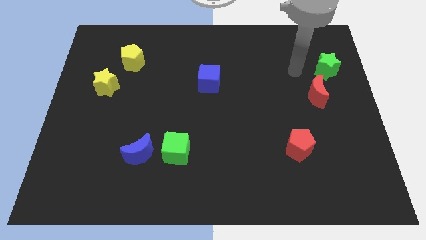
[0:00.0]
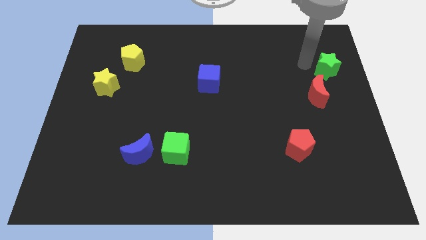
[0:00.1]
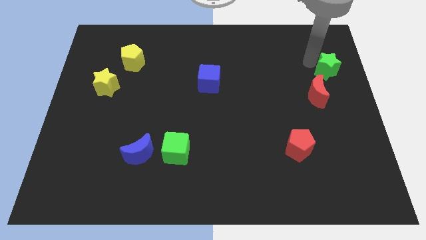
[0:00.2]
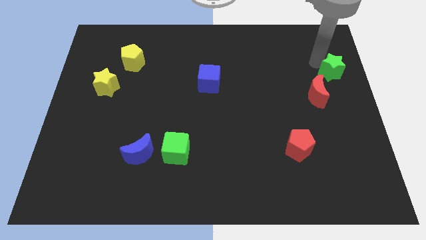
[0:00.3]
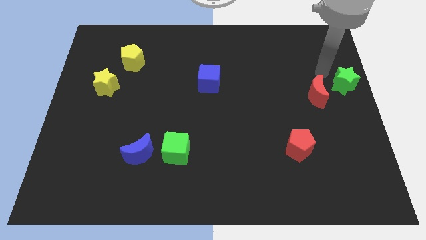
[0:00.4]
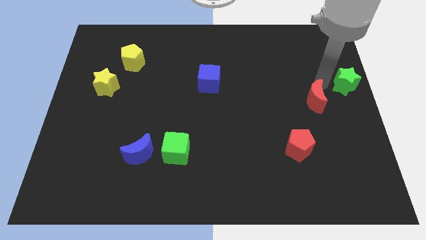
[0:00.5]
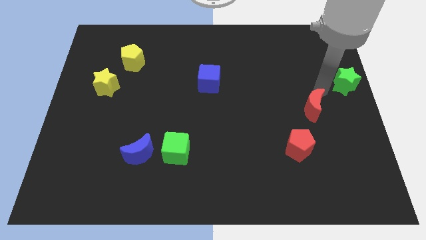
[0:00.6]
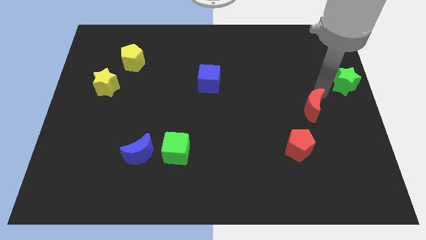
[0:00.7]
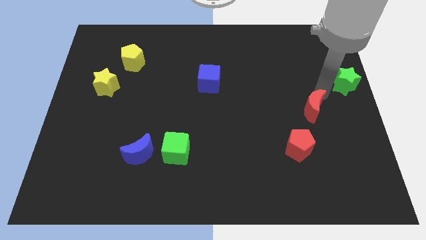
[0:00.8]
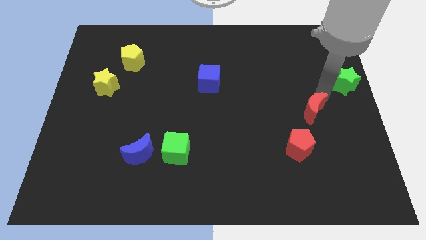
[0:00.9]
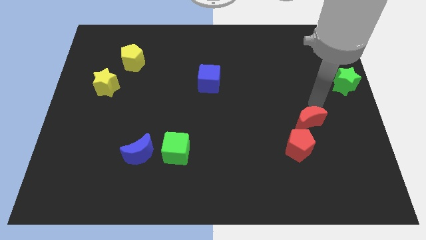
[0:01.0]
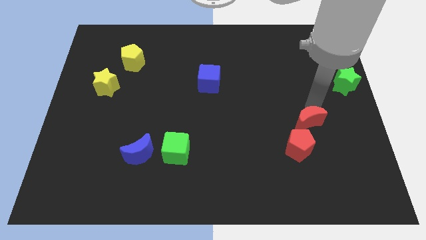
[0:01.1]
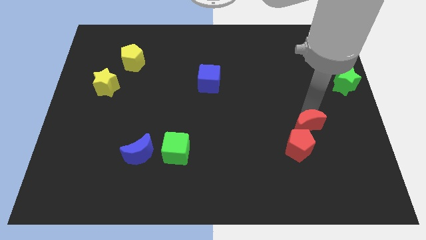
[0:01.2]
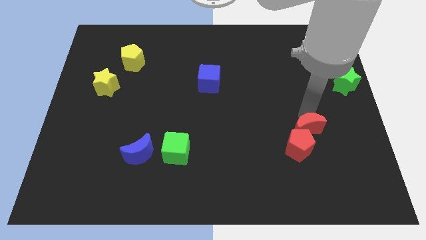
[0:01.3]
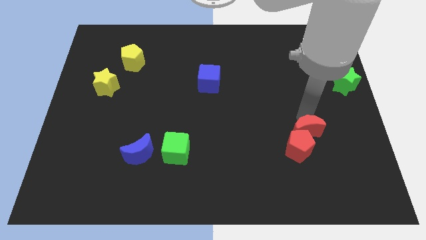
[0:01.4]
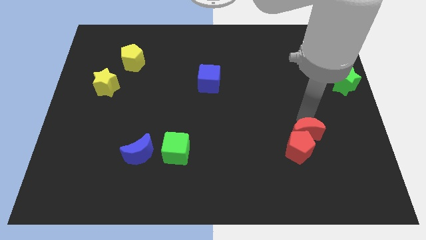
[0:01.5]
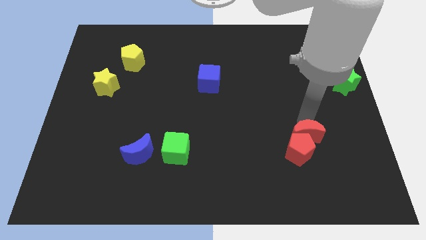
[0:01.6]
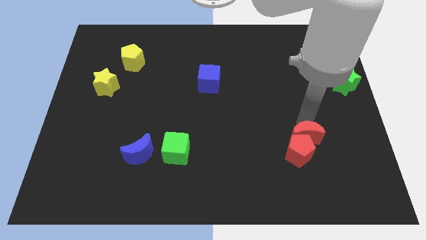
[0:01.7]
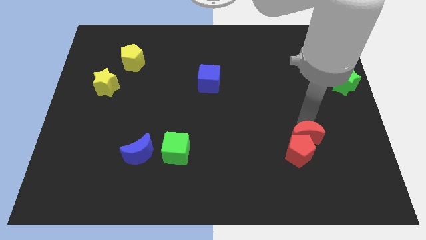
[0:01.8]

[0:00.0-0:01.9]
move the red moon into the red pentagon

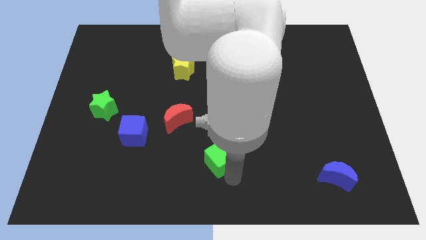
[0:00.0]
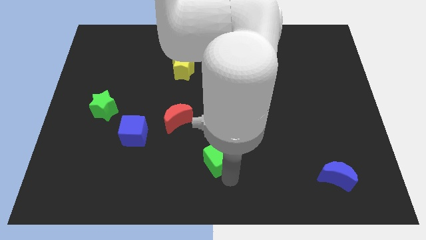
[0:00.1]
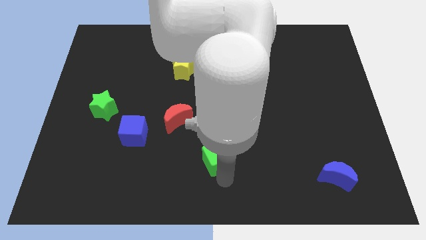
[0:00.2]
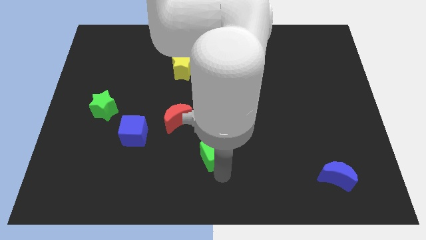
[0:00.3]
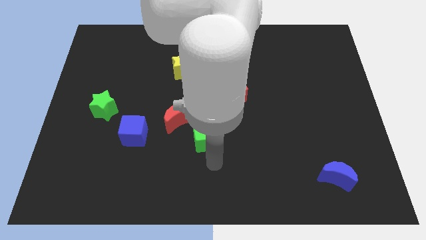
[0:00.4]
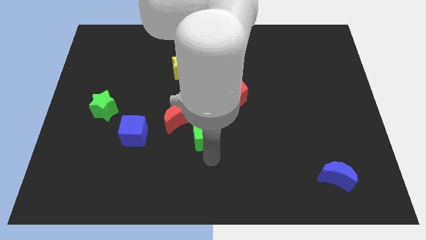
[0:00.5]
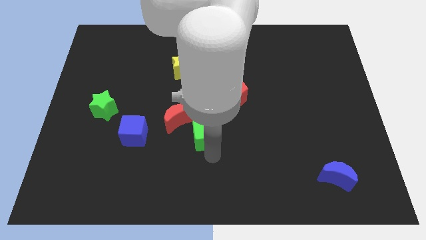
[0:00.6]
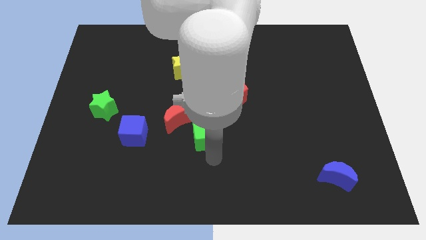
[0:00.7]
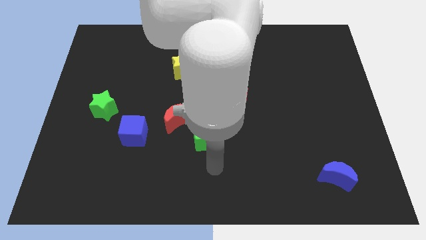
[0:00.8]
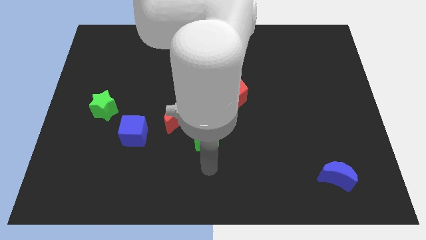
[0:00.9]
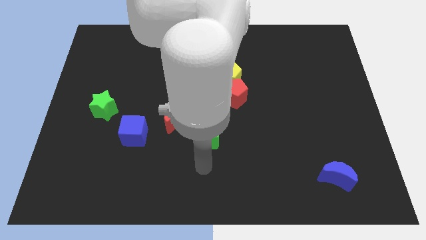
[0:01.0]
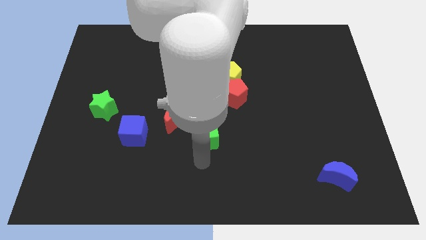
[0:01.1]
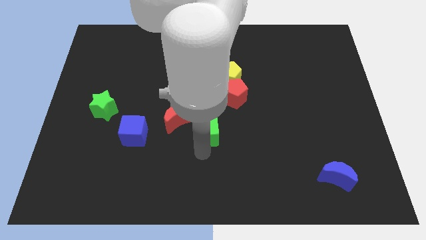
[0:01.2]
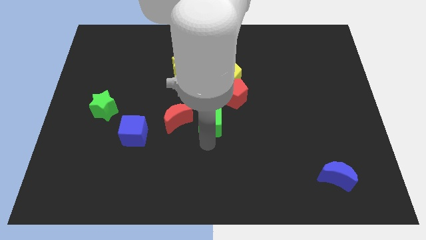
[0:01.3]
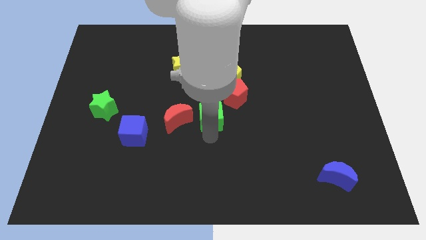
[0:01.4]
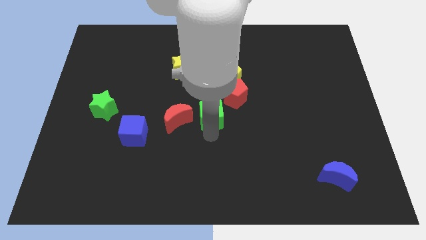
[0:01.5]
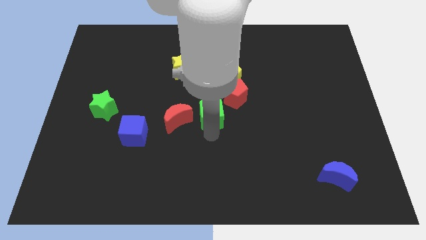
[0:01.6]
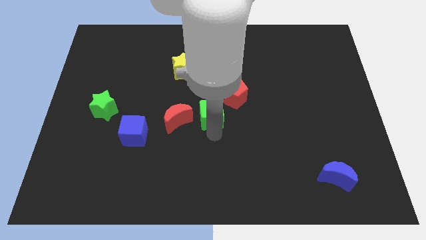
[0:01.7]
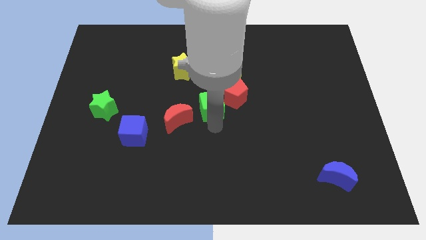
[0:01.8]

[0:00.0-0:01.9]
move the green cube to the center of the board

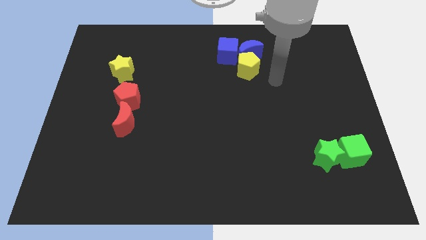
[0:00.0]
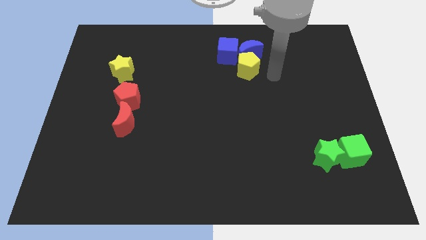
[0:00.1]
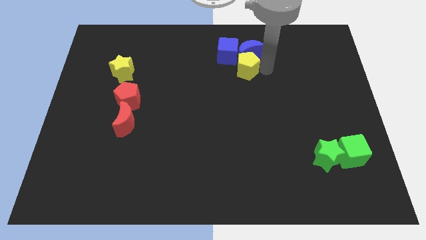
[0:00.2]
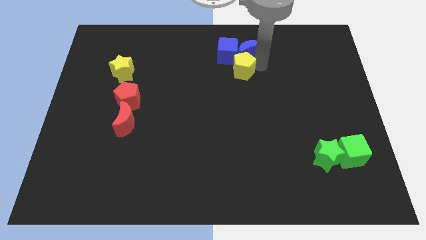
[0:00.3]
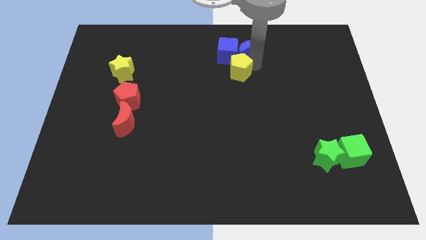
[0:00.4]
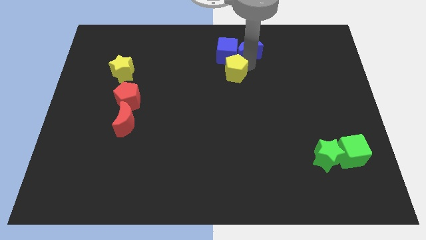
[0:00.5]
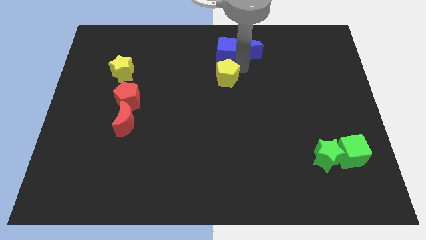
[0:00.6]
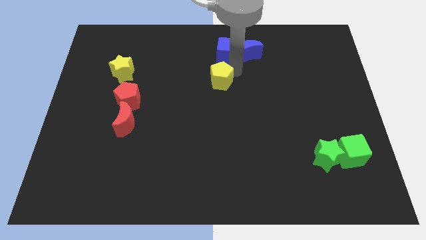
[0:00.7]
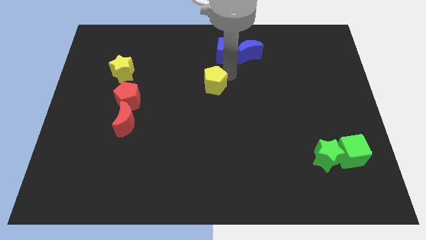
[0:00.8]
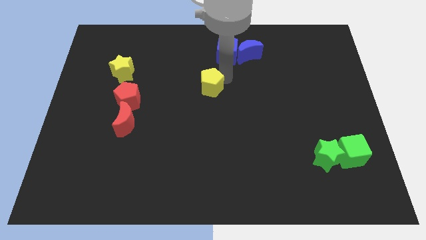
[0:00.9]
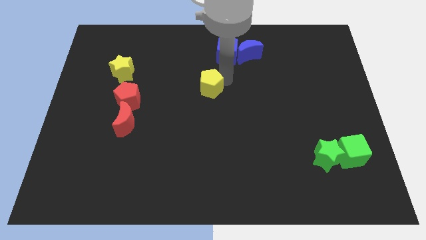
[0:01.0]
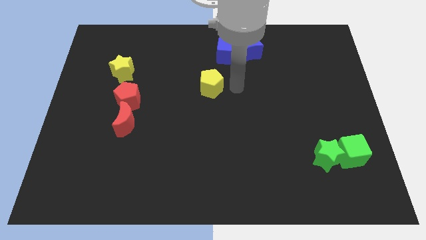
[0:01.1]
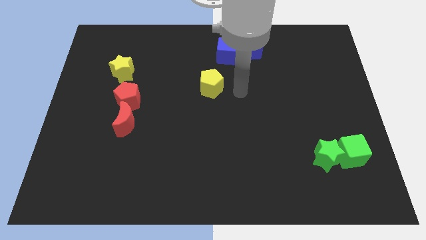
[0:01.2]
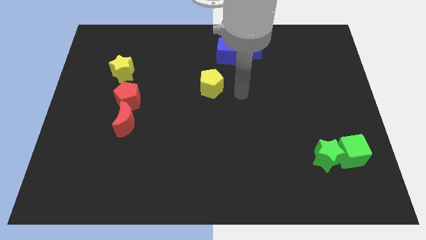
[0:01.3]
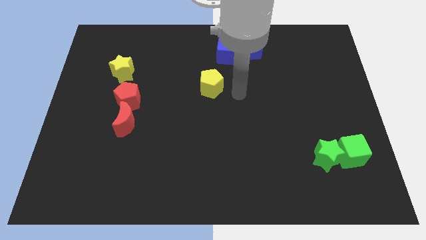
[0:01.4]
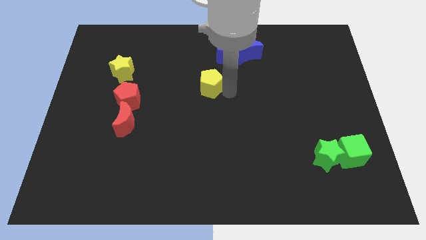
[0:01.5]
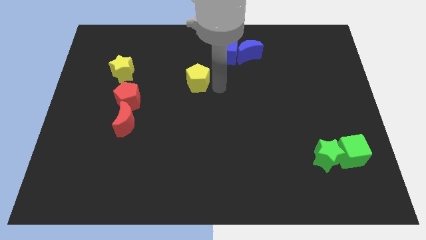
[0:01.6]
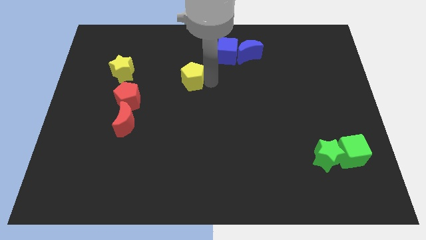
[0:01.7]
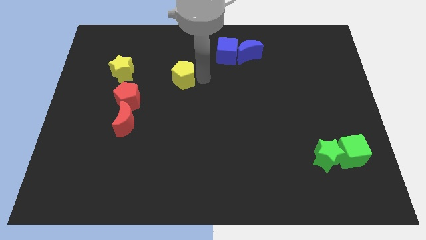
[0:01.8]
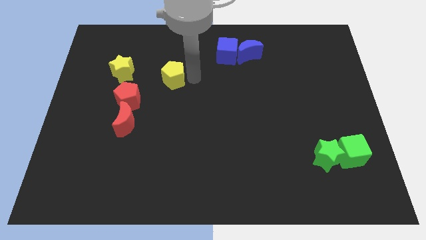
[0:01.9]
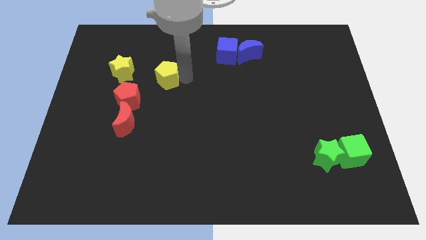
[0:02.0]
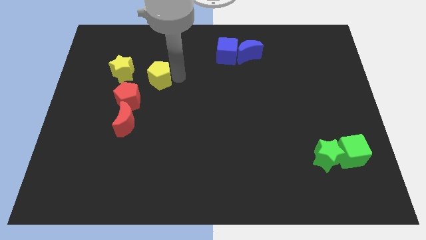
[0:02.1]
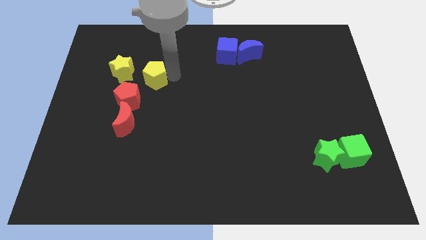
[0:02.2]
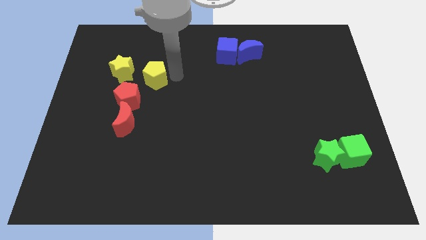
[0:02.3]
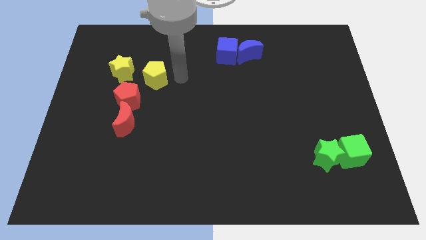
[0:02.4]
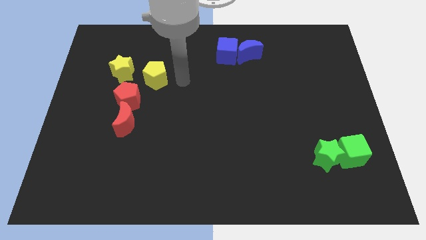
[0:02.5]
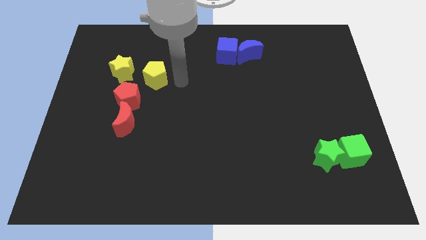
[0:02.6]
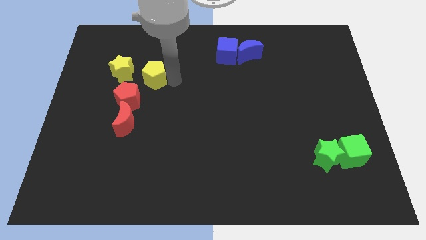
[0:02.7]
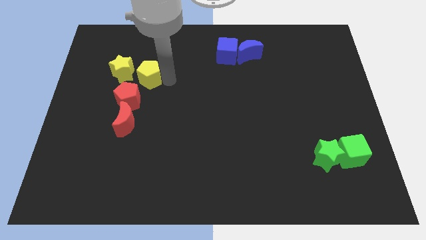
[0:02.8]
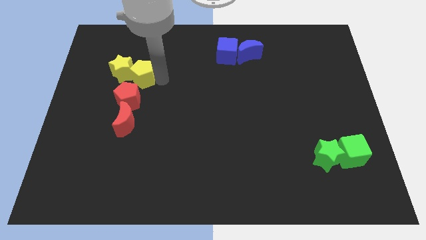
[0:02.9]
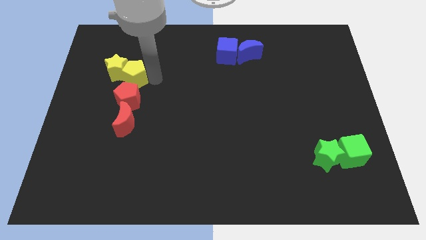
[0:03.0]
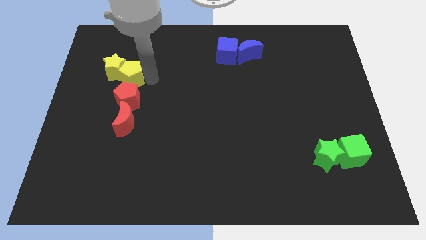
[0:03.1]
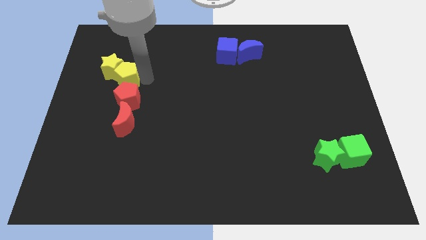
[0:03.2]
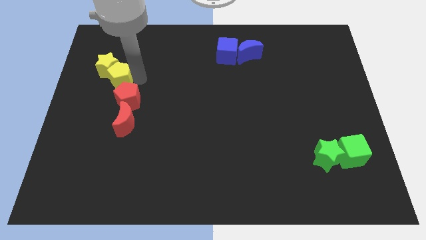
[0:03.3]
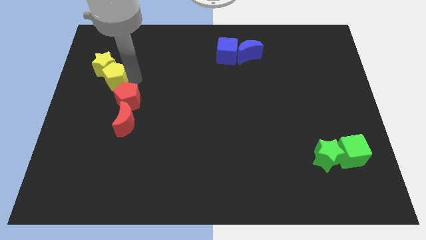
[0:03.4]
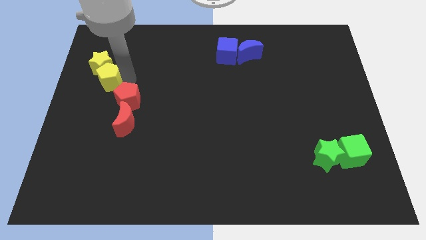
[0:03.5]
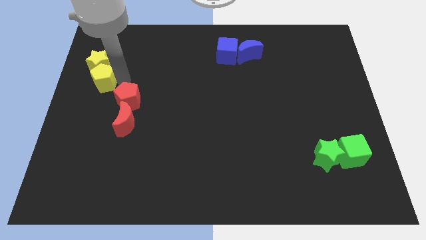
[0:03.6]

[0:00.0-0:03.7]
place the yellow pentagon below the yellow star

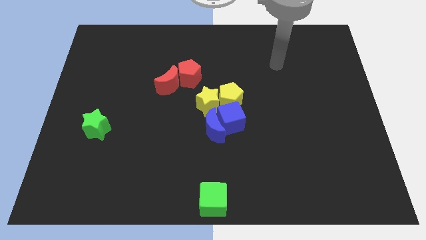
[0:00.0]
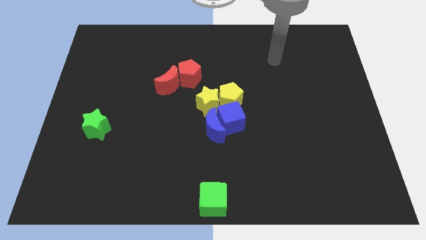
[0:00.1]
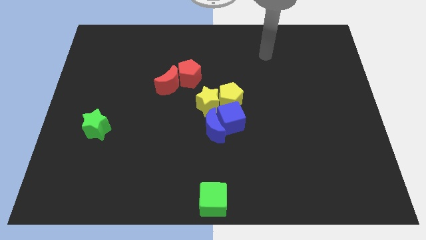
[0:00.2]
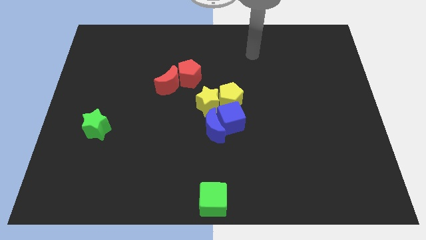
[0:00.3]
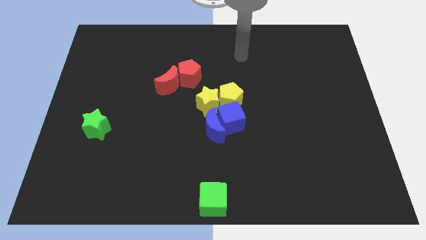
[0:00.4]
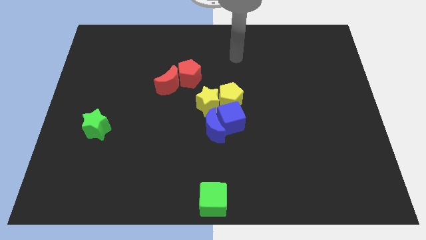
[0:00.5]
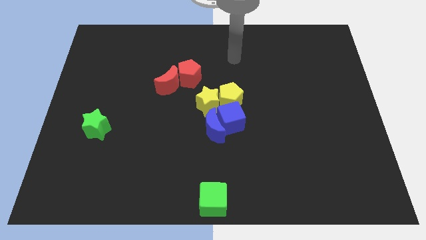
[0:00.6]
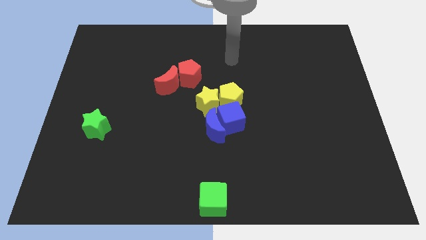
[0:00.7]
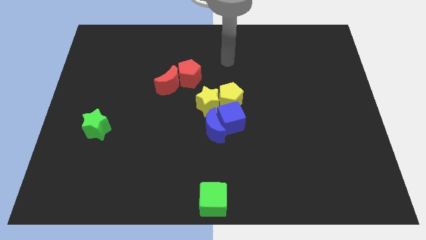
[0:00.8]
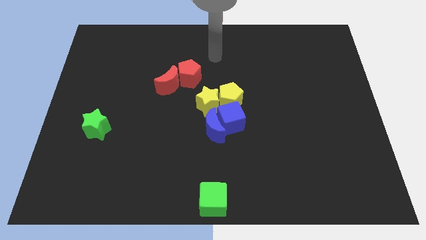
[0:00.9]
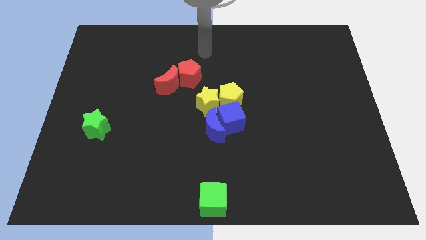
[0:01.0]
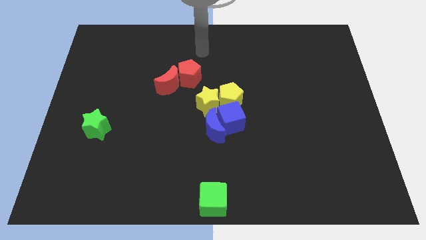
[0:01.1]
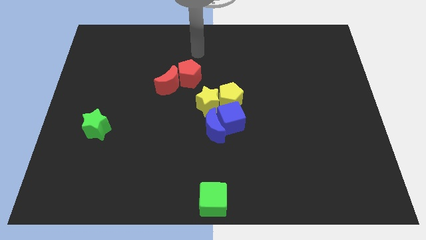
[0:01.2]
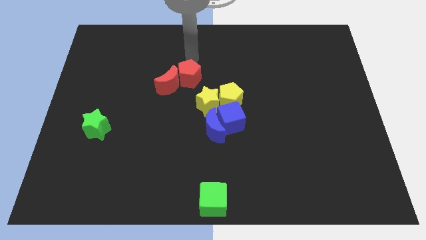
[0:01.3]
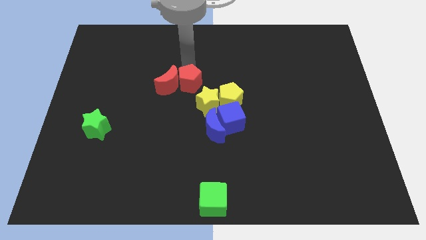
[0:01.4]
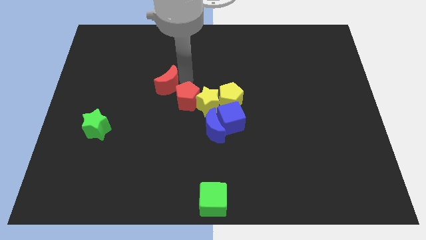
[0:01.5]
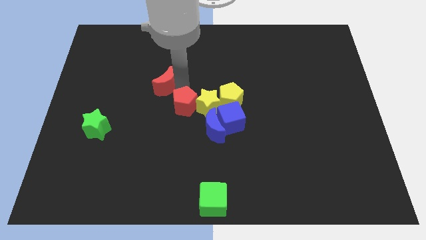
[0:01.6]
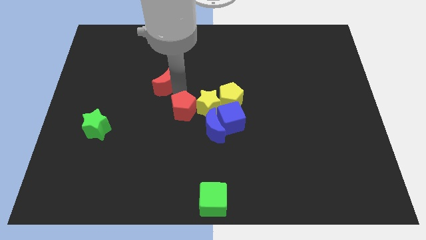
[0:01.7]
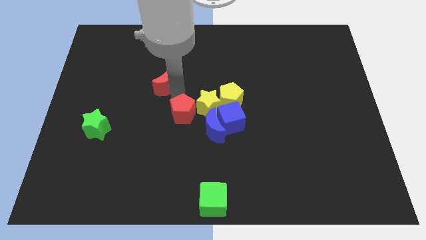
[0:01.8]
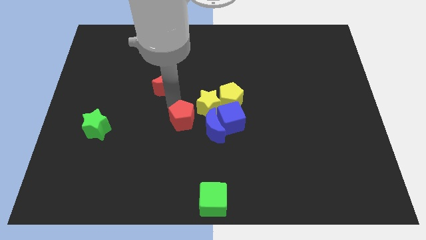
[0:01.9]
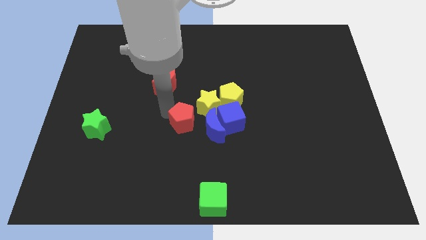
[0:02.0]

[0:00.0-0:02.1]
move the red pentagon at the left side of the yellow star
